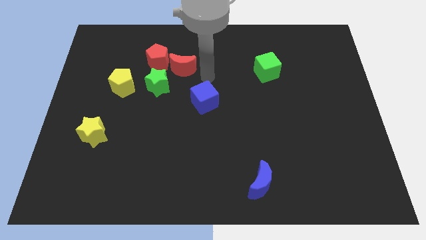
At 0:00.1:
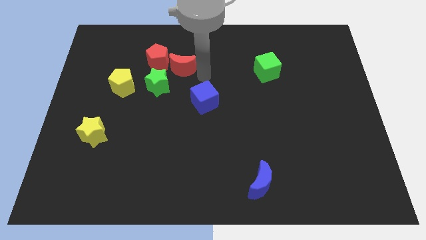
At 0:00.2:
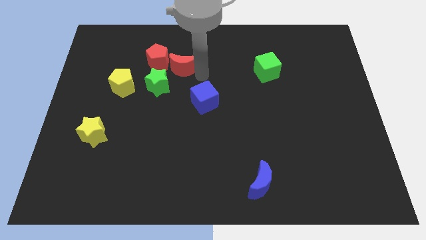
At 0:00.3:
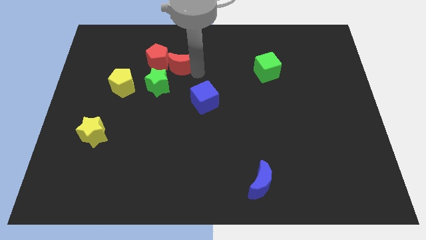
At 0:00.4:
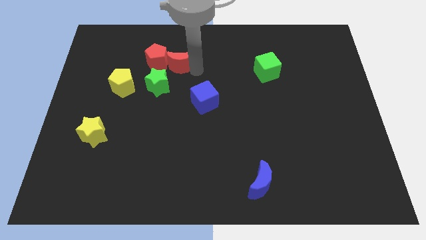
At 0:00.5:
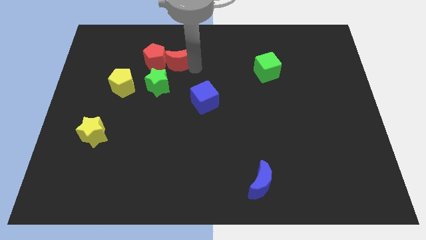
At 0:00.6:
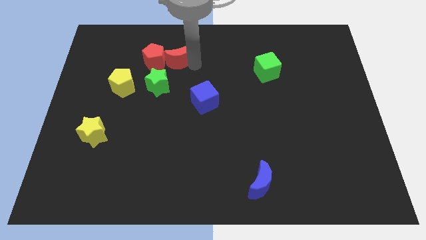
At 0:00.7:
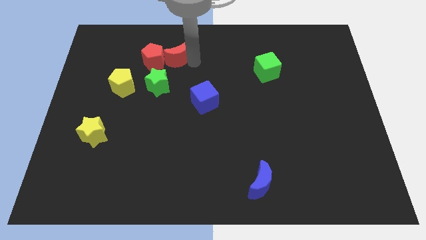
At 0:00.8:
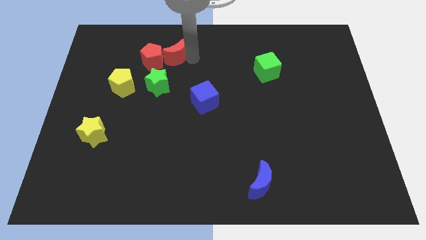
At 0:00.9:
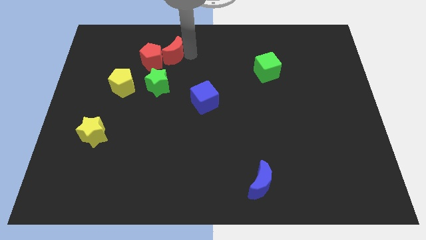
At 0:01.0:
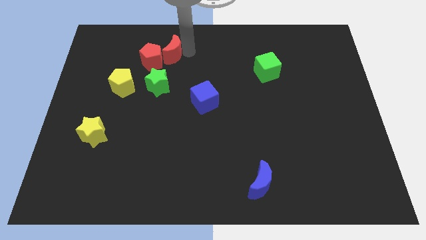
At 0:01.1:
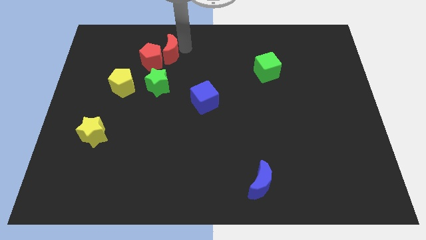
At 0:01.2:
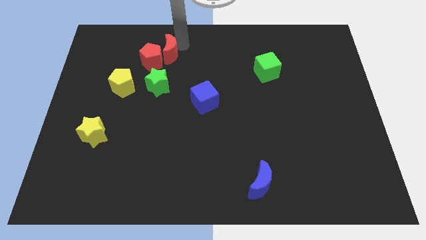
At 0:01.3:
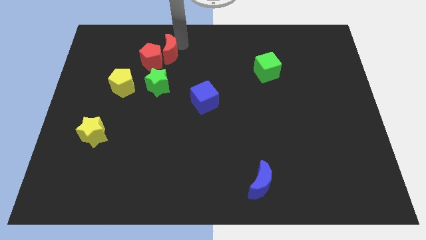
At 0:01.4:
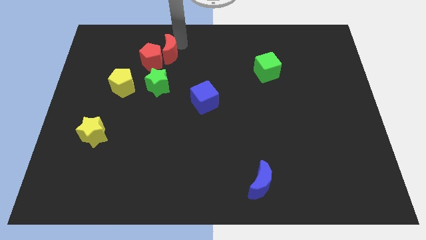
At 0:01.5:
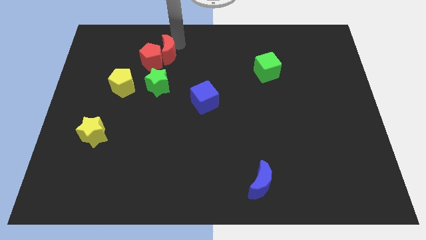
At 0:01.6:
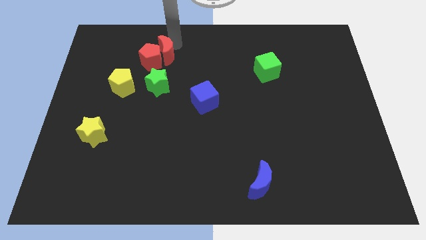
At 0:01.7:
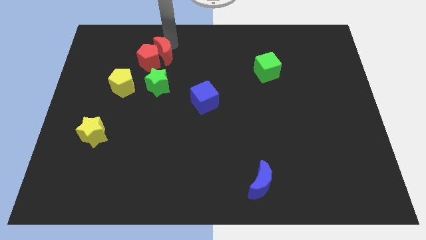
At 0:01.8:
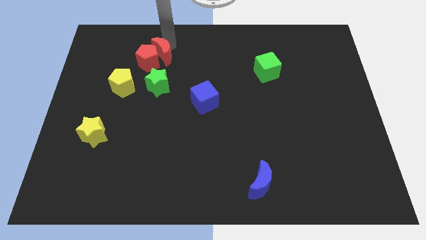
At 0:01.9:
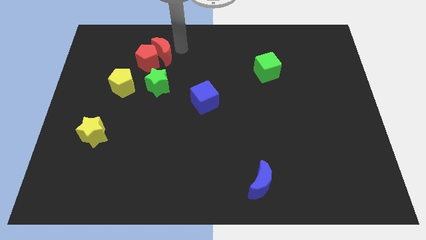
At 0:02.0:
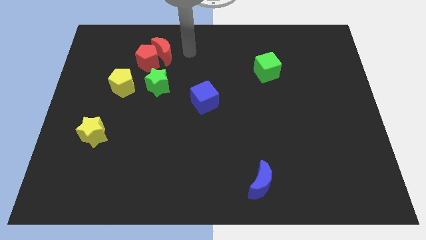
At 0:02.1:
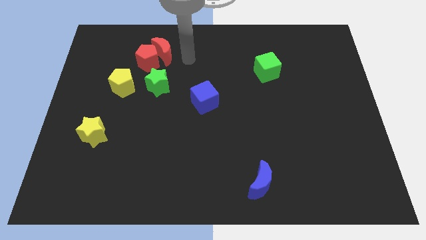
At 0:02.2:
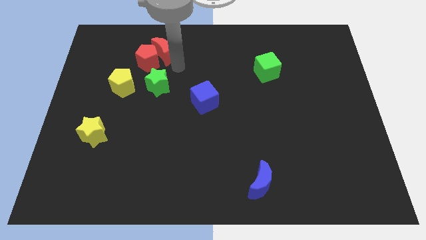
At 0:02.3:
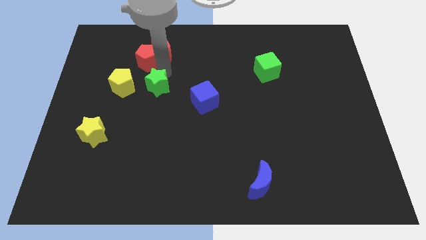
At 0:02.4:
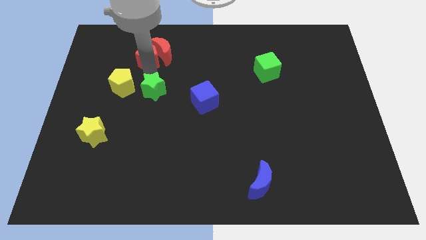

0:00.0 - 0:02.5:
turn the red moon into the red pentagon above and push

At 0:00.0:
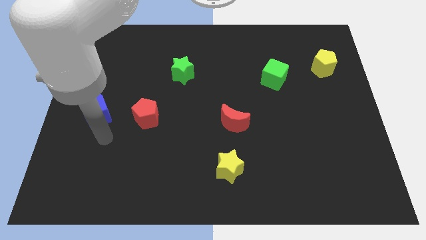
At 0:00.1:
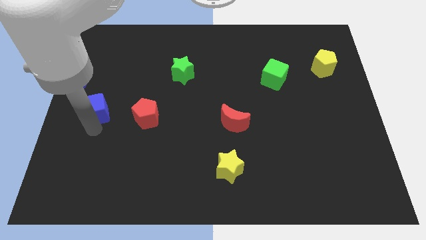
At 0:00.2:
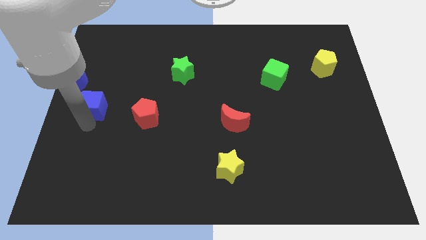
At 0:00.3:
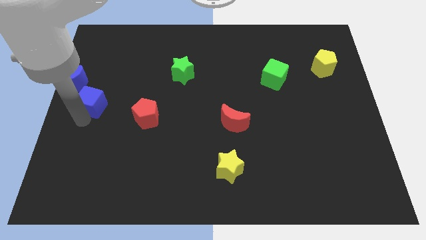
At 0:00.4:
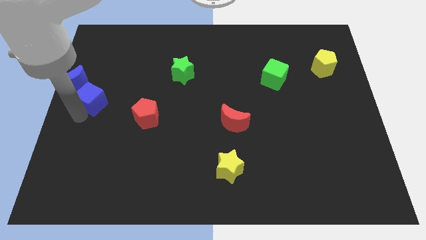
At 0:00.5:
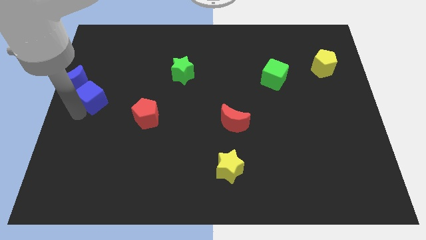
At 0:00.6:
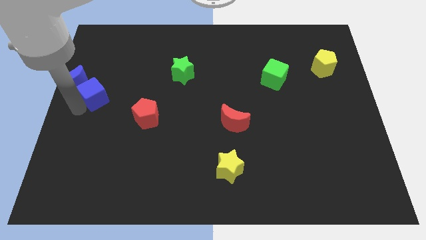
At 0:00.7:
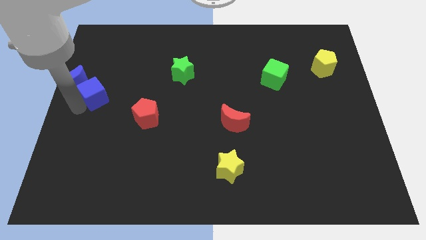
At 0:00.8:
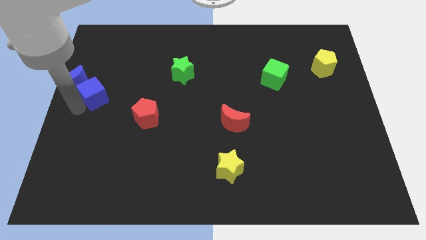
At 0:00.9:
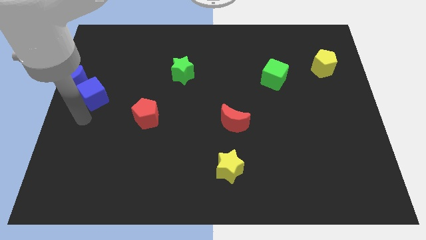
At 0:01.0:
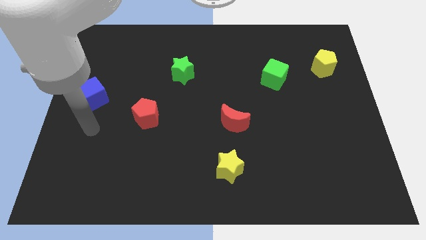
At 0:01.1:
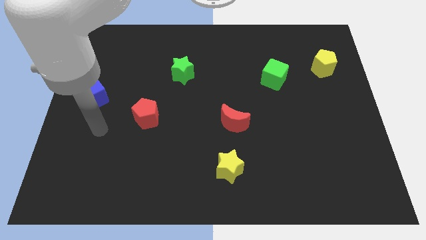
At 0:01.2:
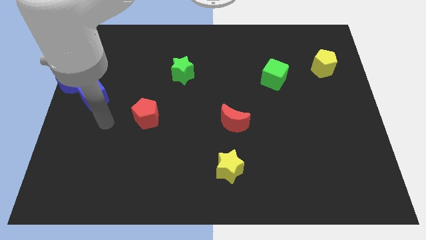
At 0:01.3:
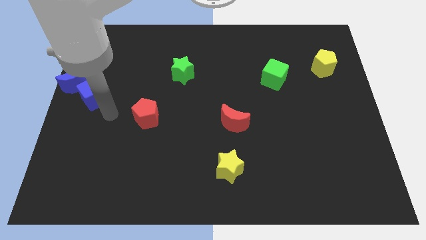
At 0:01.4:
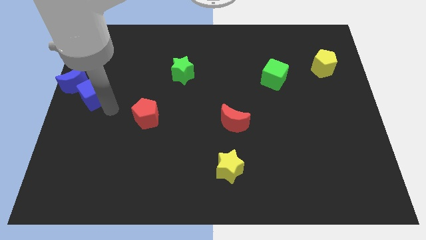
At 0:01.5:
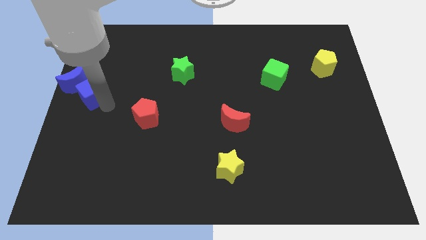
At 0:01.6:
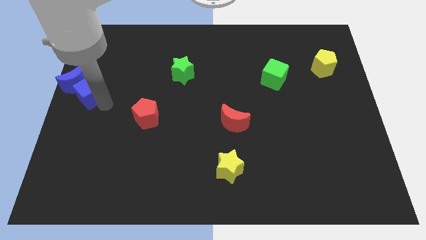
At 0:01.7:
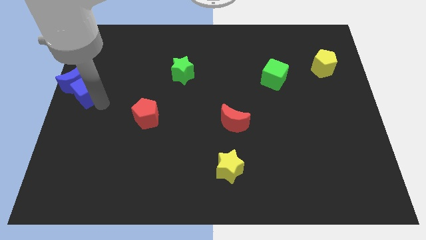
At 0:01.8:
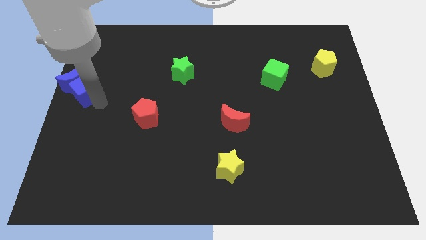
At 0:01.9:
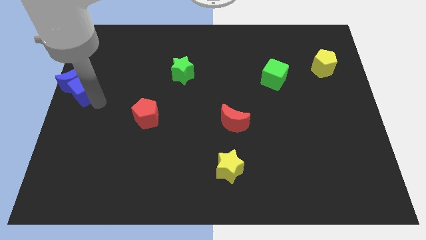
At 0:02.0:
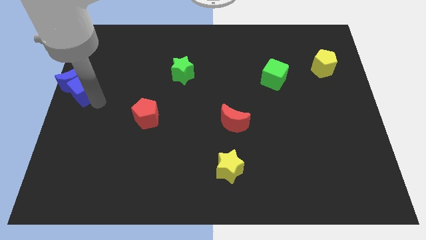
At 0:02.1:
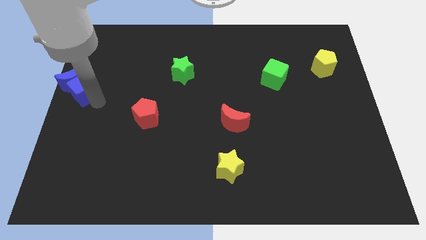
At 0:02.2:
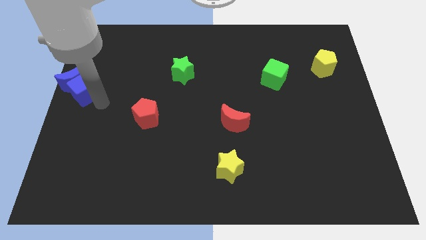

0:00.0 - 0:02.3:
place blue cube to the bottom right of the blue moon

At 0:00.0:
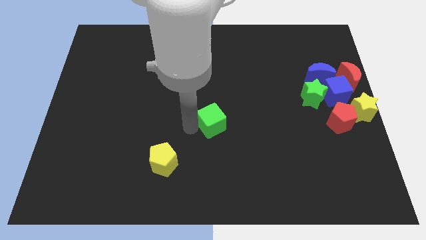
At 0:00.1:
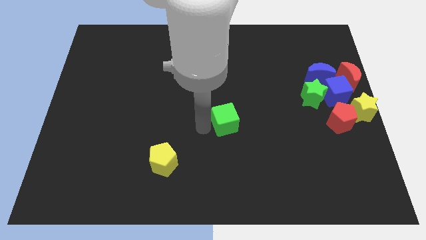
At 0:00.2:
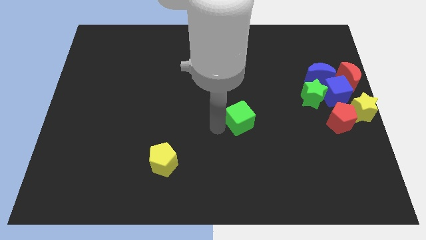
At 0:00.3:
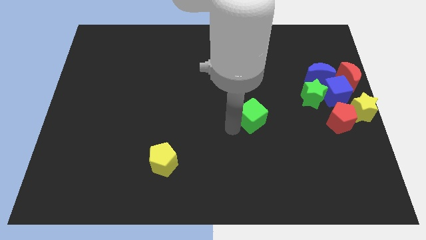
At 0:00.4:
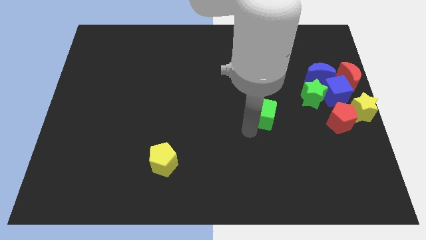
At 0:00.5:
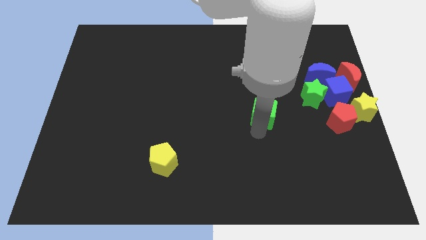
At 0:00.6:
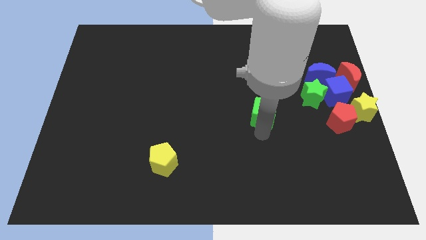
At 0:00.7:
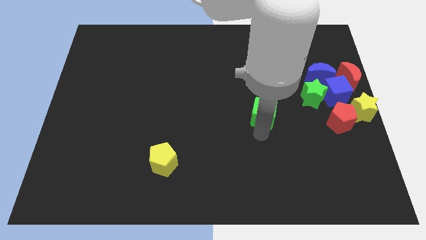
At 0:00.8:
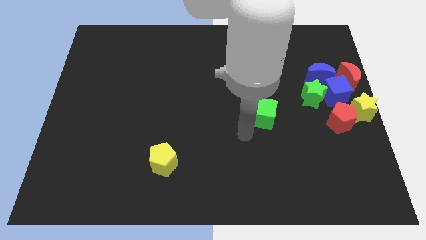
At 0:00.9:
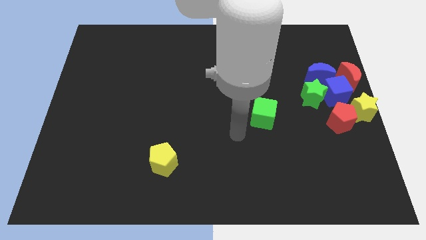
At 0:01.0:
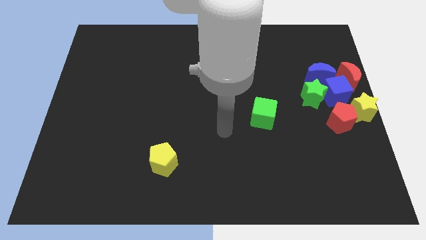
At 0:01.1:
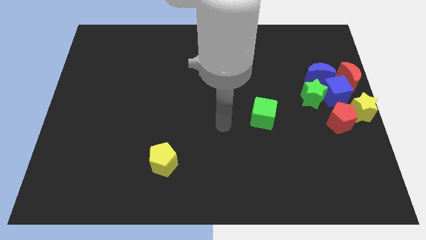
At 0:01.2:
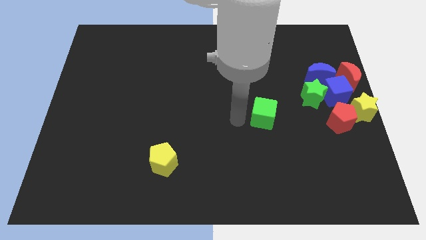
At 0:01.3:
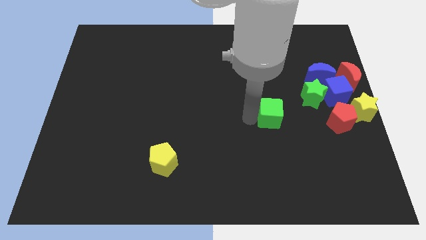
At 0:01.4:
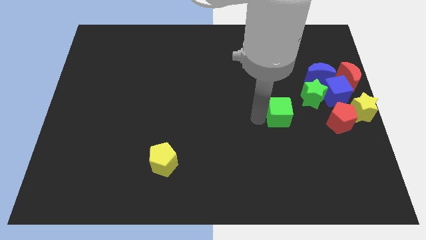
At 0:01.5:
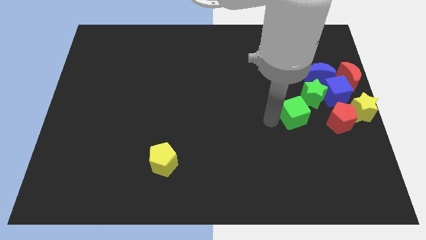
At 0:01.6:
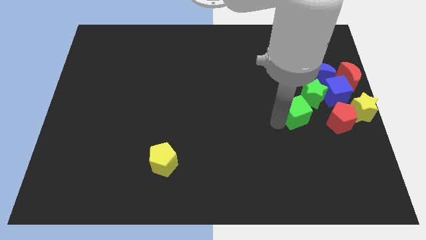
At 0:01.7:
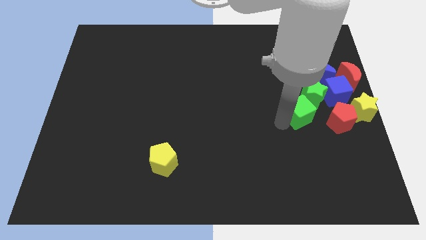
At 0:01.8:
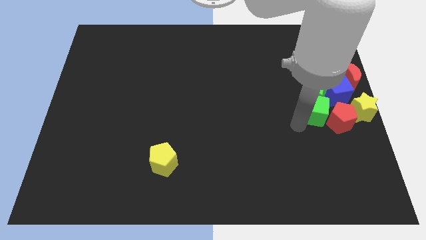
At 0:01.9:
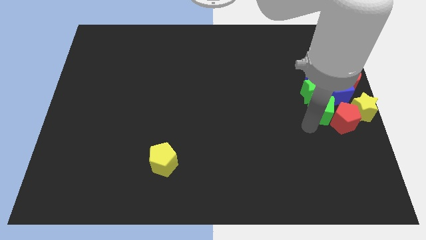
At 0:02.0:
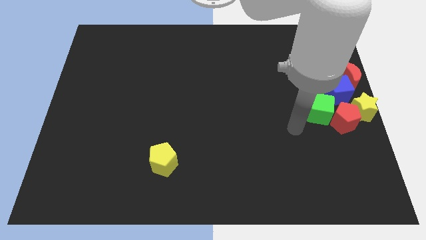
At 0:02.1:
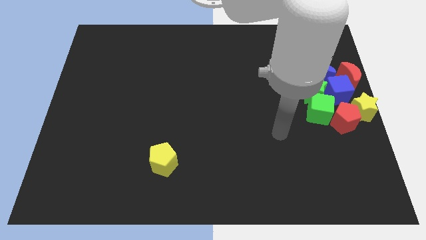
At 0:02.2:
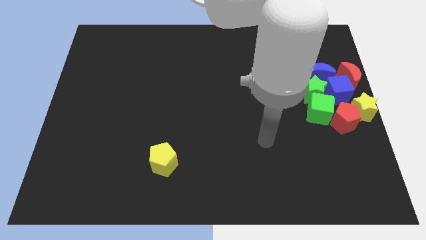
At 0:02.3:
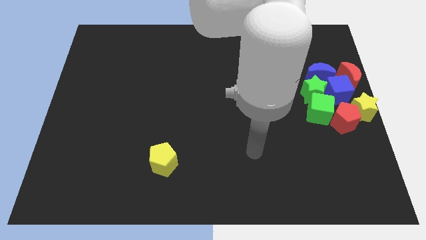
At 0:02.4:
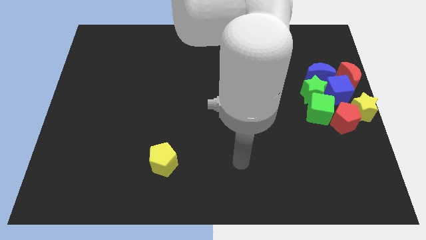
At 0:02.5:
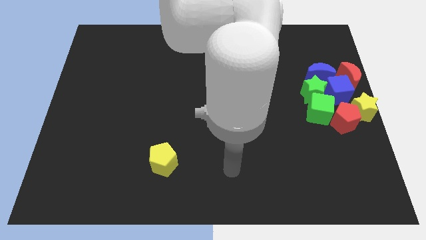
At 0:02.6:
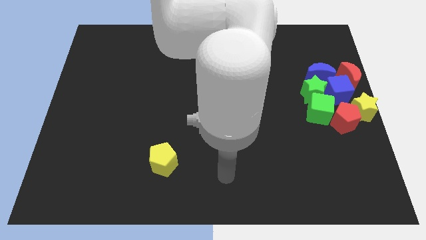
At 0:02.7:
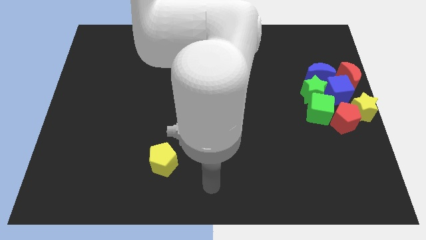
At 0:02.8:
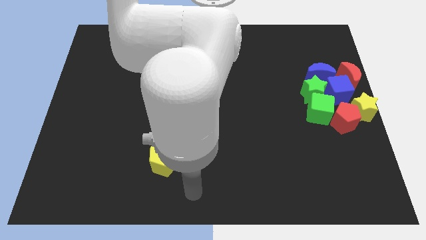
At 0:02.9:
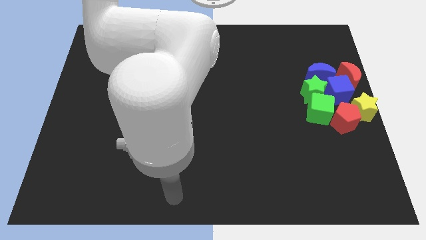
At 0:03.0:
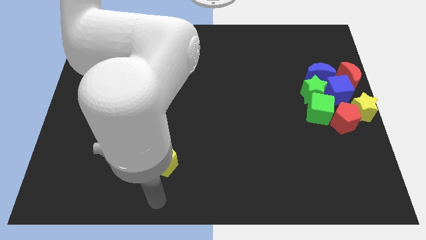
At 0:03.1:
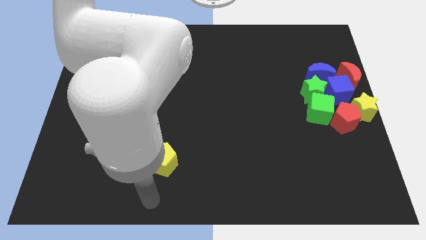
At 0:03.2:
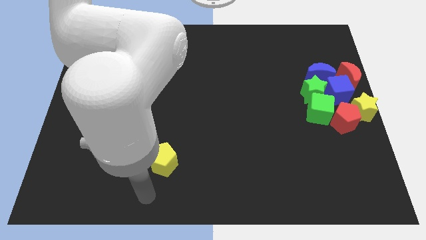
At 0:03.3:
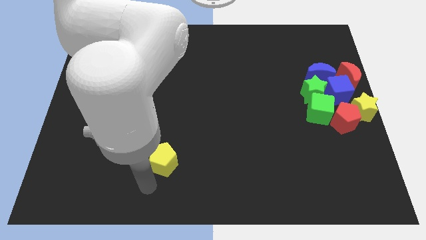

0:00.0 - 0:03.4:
move the green cube into group of objects

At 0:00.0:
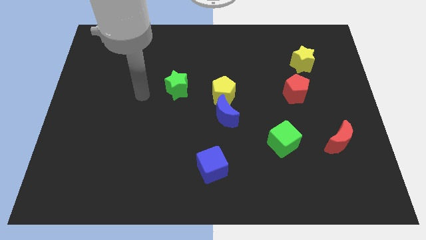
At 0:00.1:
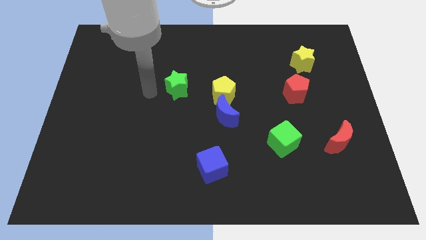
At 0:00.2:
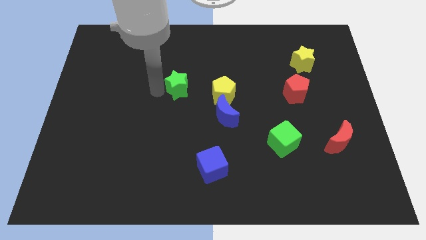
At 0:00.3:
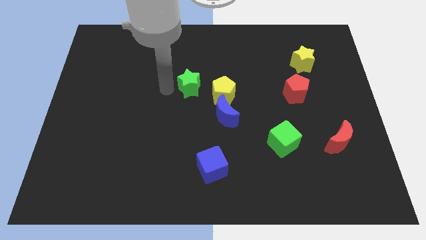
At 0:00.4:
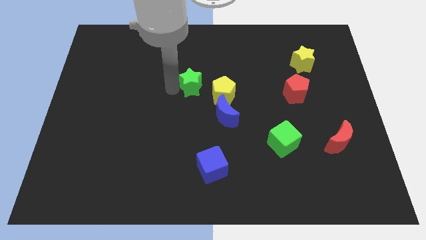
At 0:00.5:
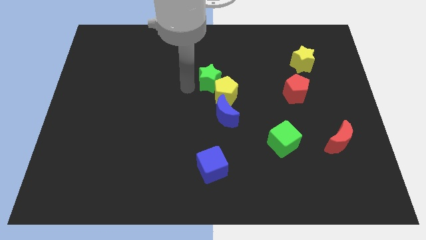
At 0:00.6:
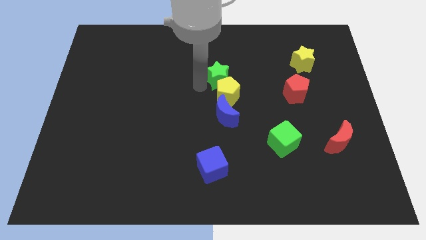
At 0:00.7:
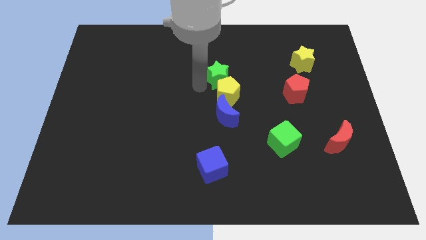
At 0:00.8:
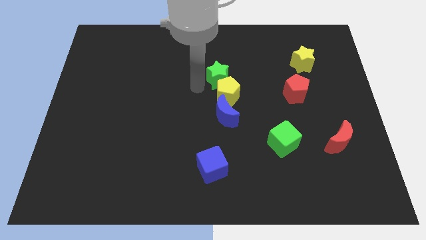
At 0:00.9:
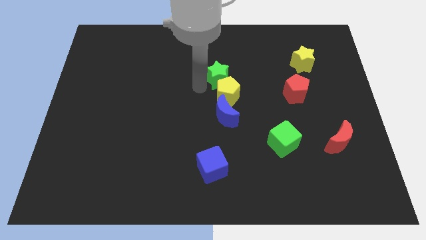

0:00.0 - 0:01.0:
place the green star at the top side of the yellow pentagon
